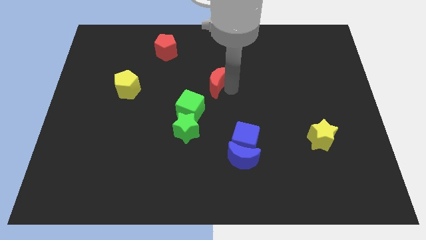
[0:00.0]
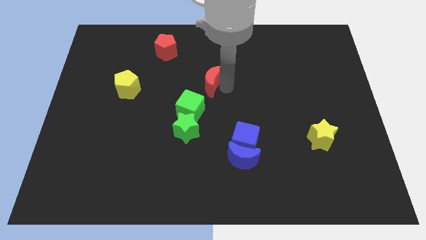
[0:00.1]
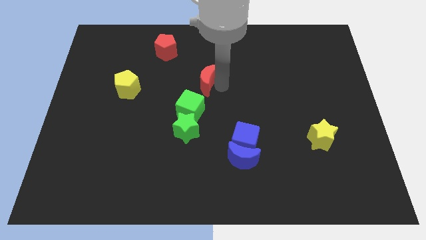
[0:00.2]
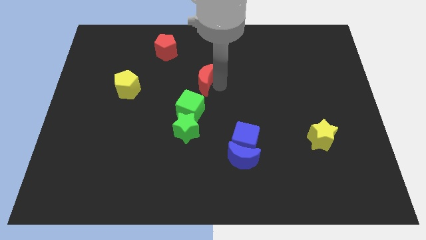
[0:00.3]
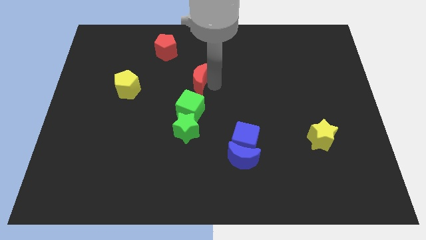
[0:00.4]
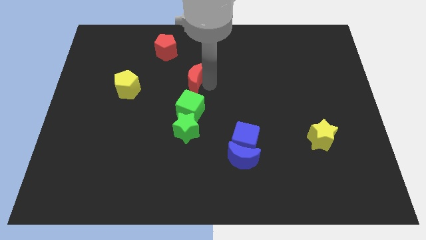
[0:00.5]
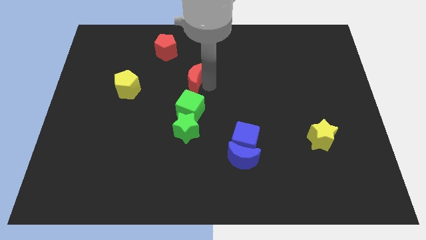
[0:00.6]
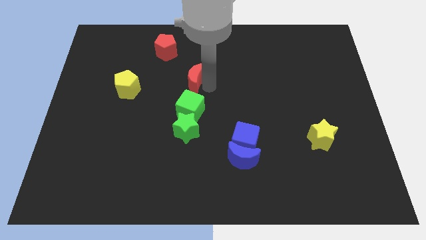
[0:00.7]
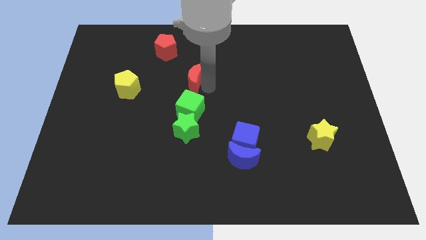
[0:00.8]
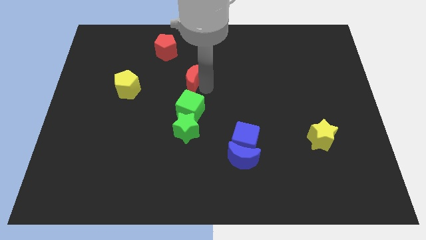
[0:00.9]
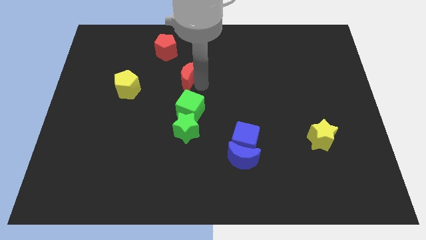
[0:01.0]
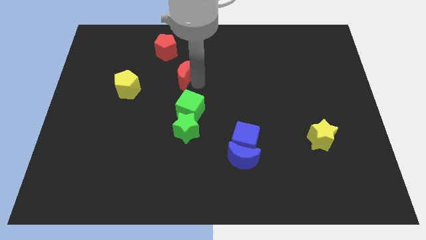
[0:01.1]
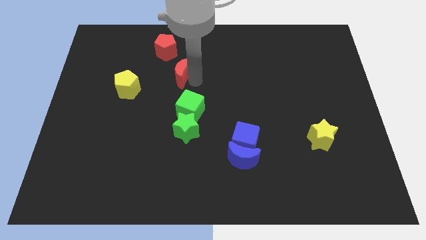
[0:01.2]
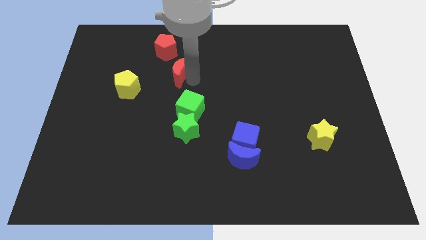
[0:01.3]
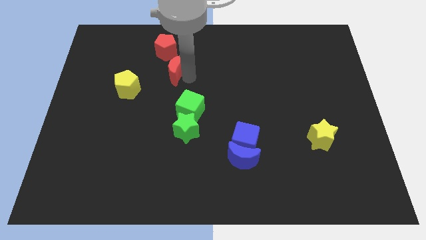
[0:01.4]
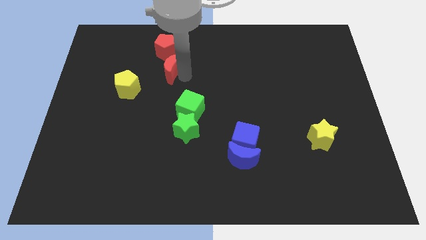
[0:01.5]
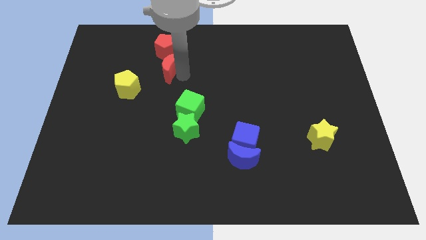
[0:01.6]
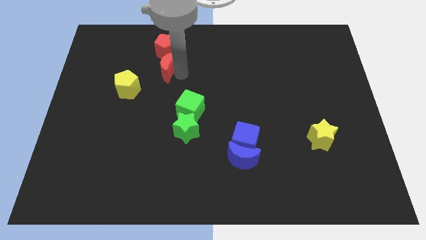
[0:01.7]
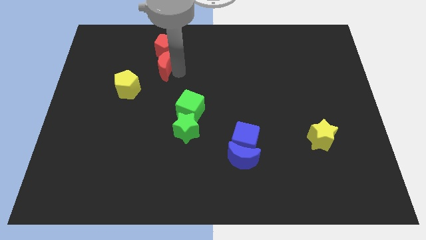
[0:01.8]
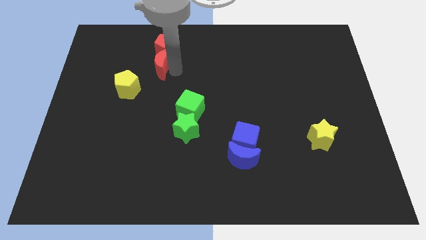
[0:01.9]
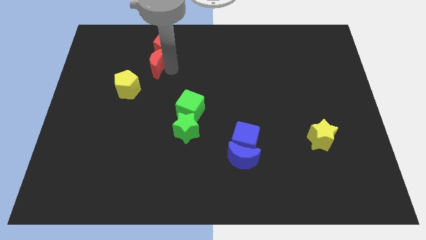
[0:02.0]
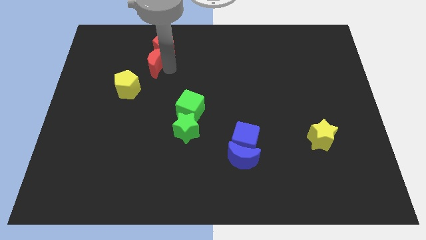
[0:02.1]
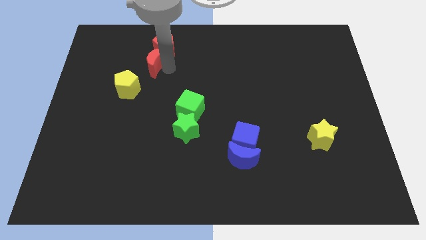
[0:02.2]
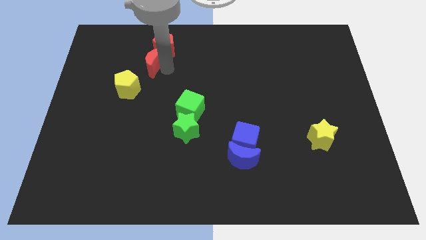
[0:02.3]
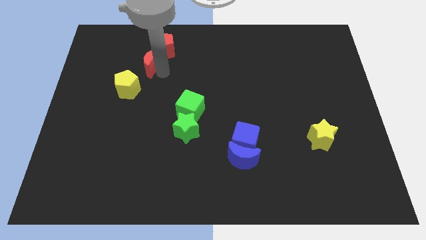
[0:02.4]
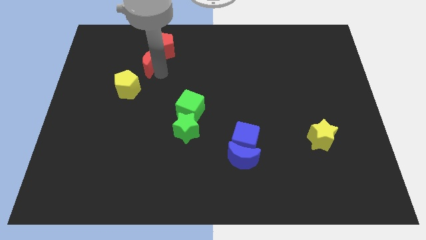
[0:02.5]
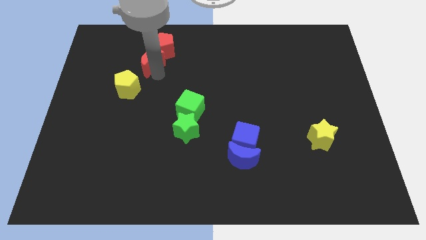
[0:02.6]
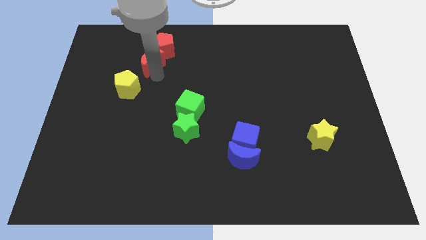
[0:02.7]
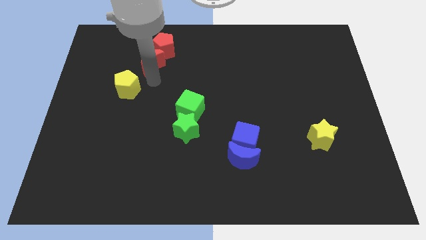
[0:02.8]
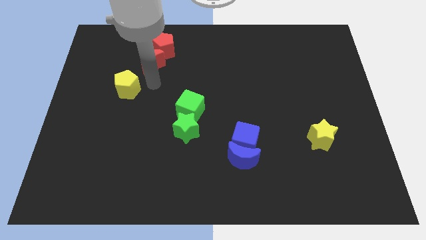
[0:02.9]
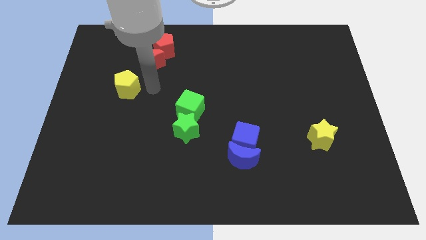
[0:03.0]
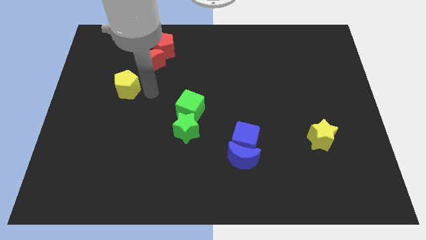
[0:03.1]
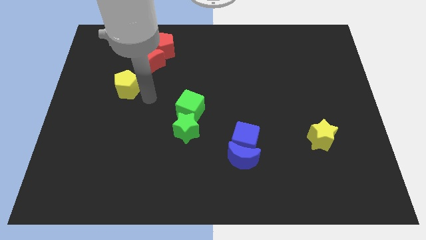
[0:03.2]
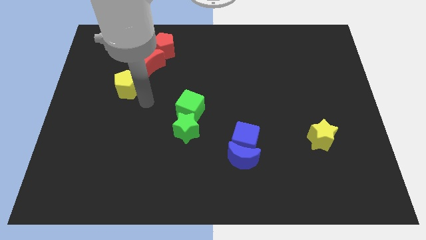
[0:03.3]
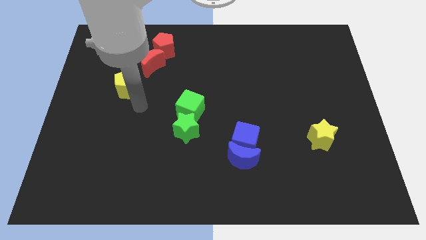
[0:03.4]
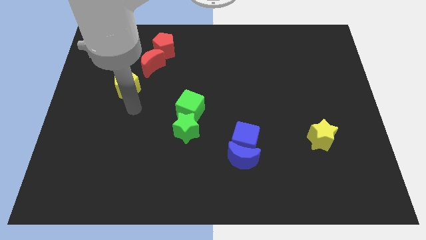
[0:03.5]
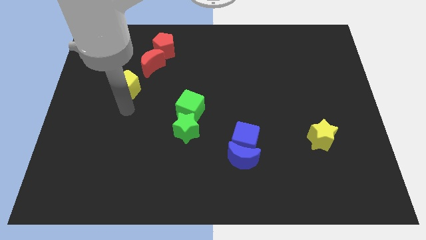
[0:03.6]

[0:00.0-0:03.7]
place red crescent close to red pentagon

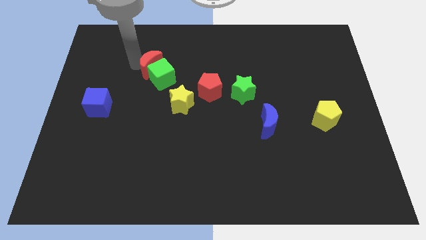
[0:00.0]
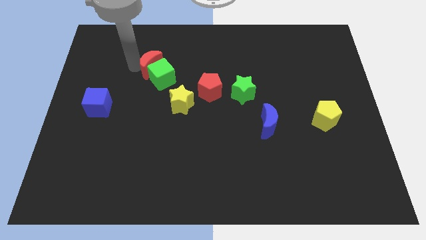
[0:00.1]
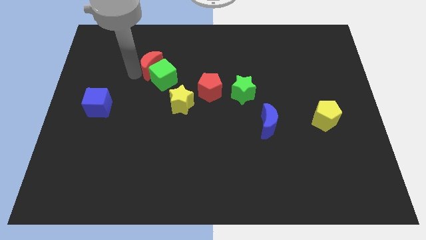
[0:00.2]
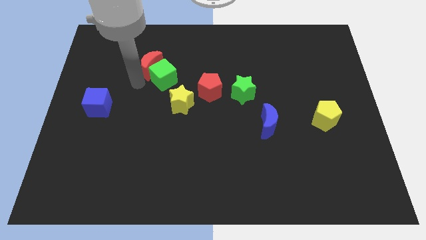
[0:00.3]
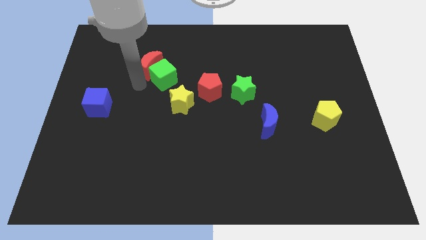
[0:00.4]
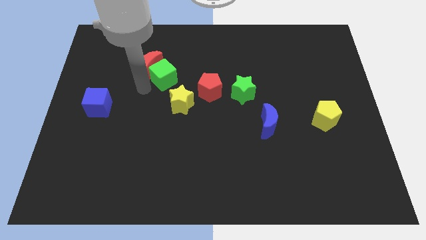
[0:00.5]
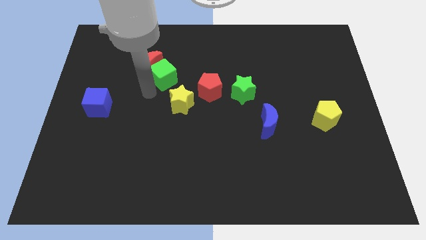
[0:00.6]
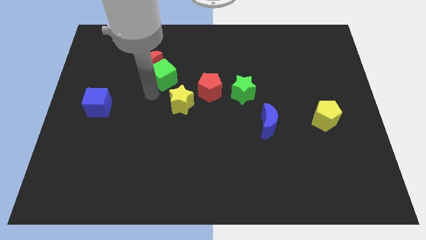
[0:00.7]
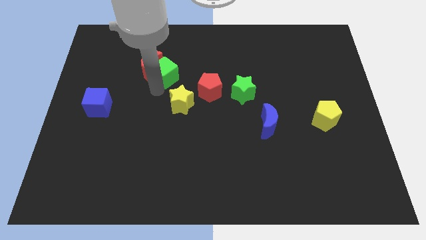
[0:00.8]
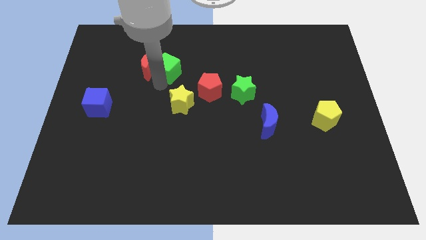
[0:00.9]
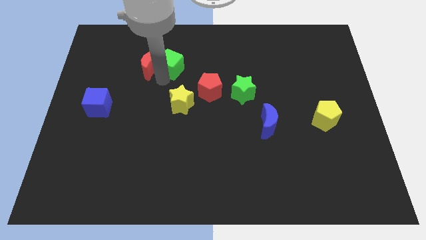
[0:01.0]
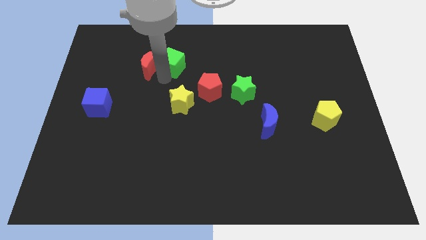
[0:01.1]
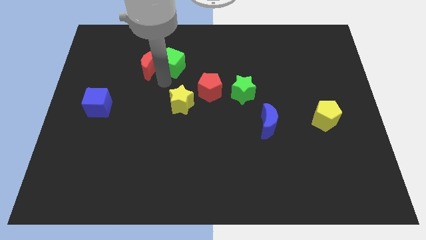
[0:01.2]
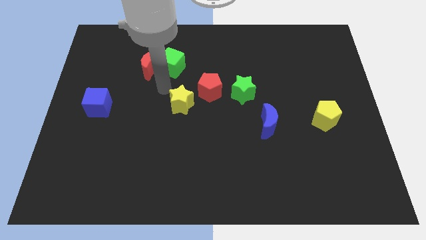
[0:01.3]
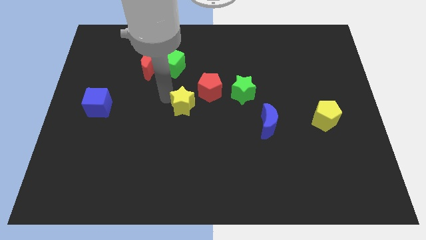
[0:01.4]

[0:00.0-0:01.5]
slide the green cube to the right of the red crescent

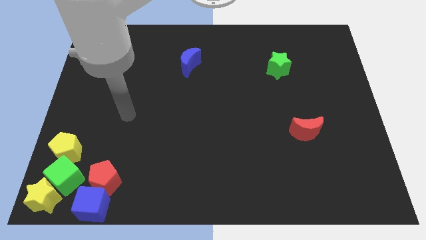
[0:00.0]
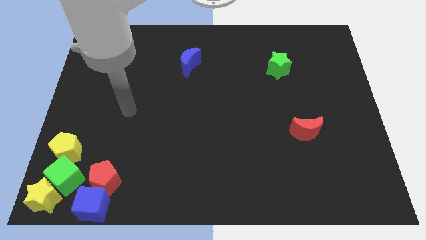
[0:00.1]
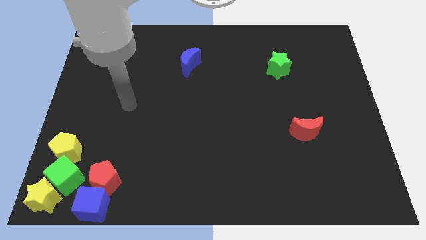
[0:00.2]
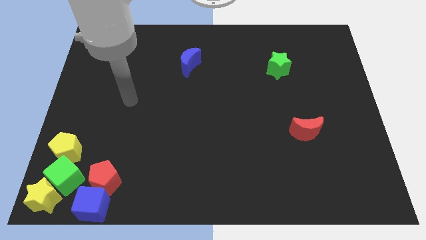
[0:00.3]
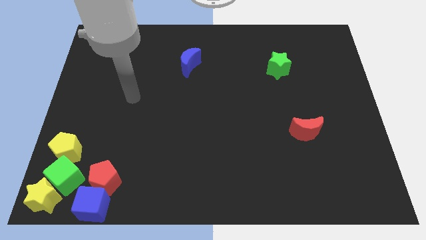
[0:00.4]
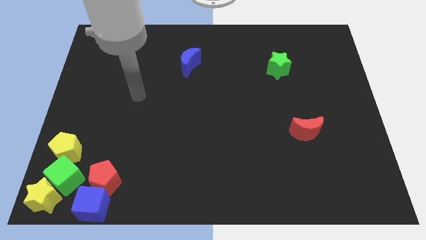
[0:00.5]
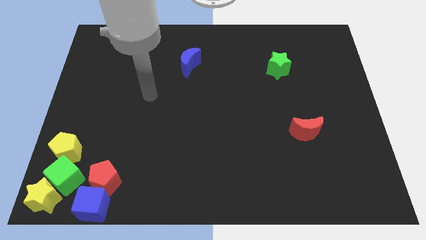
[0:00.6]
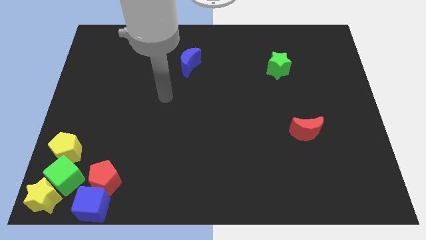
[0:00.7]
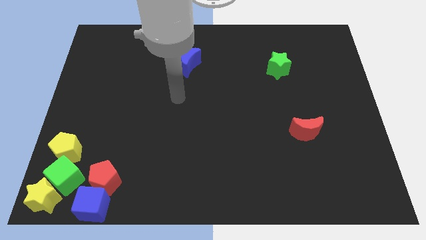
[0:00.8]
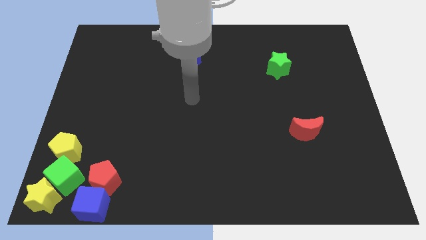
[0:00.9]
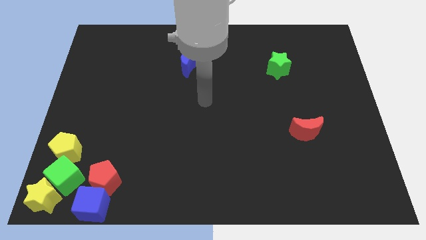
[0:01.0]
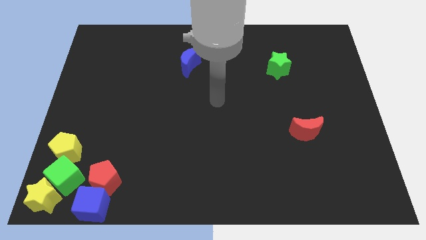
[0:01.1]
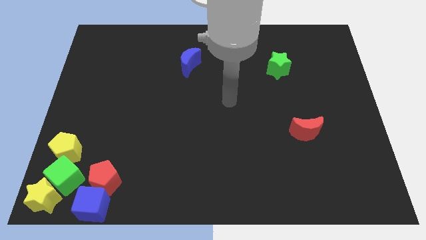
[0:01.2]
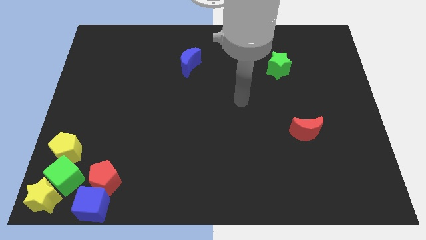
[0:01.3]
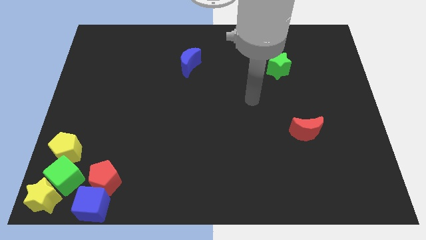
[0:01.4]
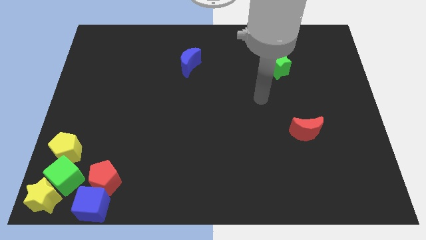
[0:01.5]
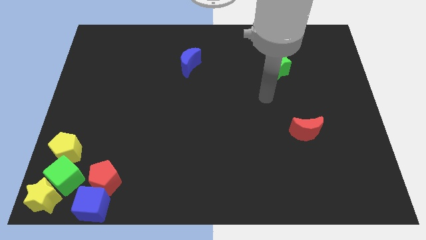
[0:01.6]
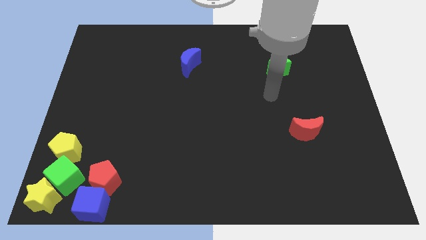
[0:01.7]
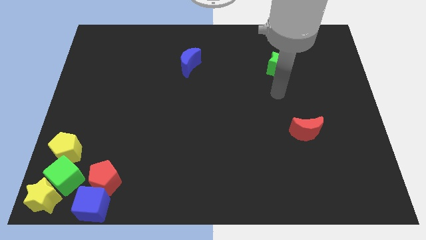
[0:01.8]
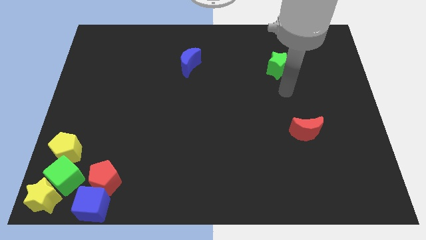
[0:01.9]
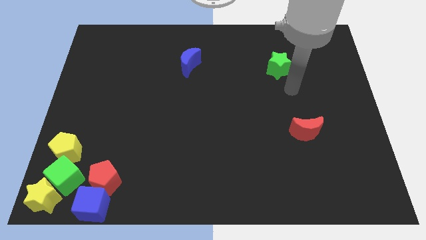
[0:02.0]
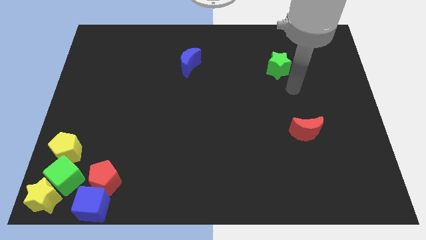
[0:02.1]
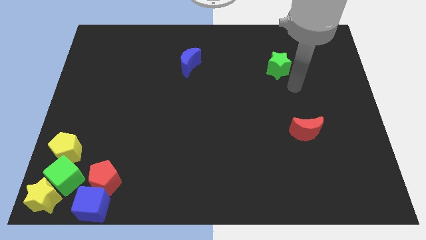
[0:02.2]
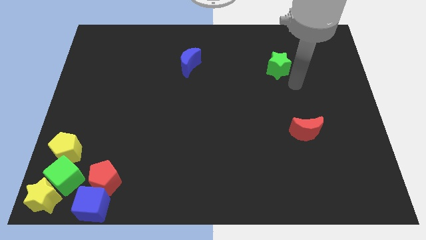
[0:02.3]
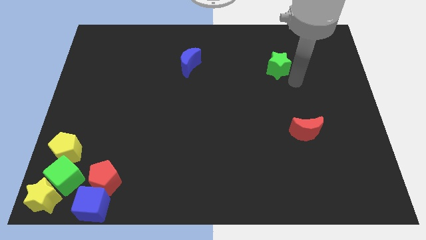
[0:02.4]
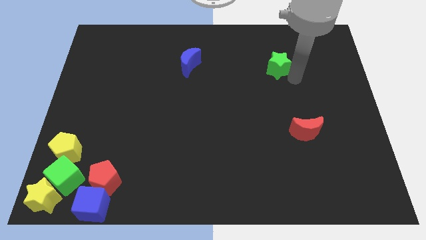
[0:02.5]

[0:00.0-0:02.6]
move your arm to the right of green star

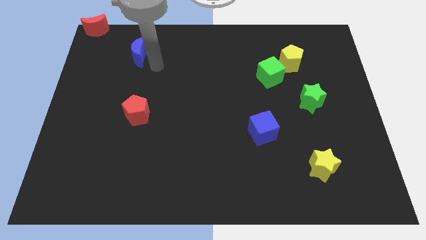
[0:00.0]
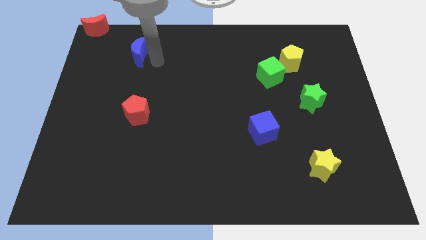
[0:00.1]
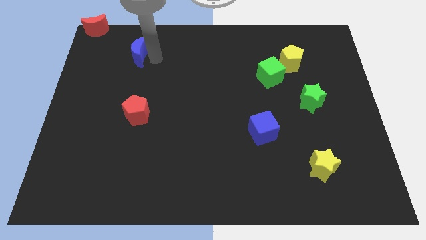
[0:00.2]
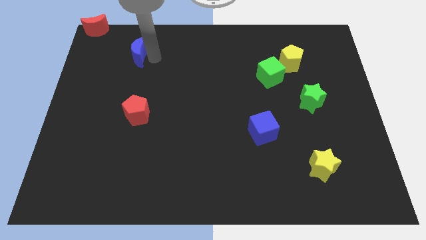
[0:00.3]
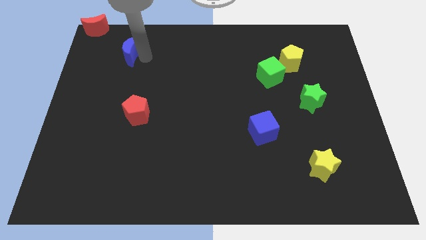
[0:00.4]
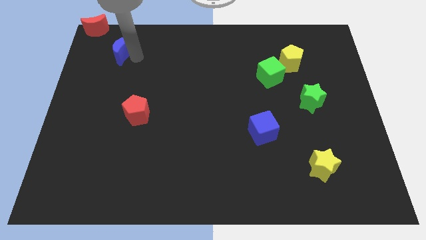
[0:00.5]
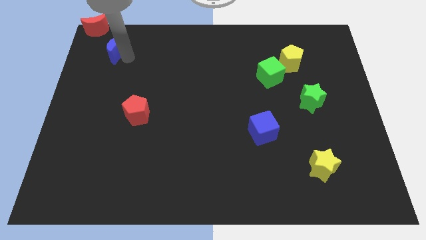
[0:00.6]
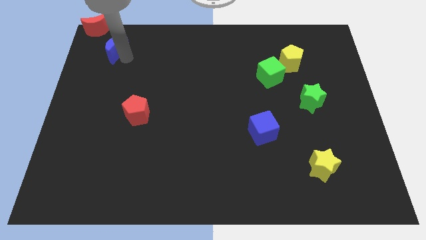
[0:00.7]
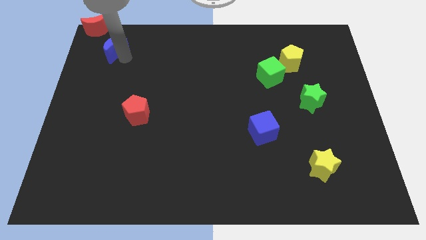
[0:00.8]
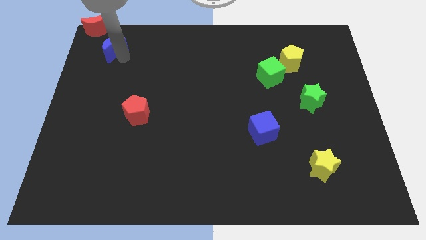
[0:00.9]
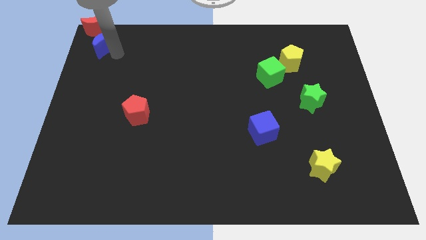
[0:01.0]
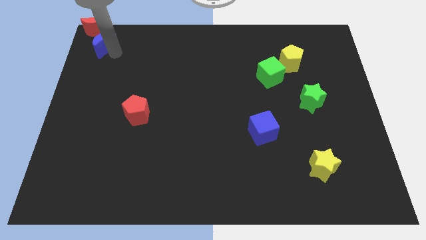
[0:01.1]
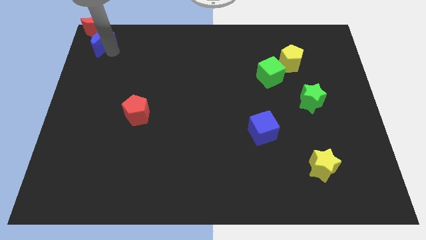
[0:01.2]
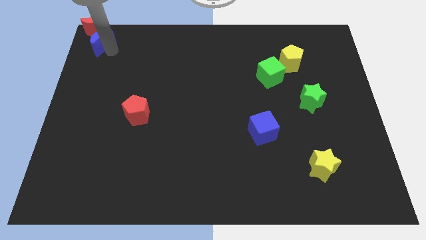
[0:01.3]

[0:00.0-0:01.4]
place the blue moon to the top right
